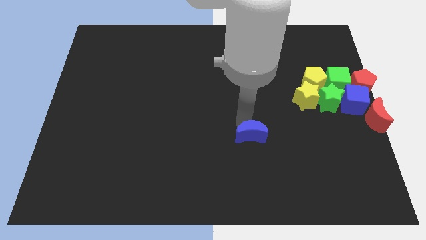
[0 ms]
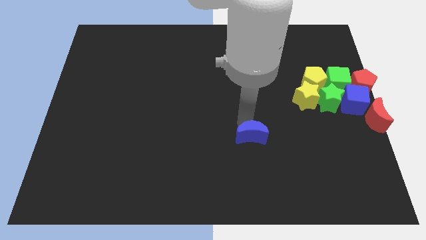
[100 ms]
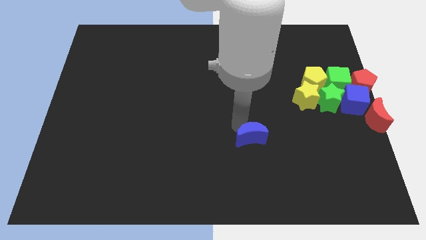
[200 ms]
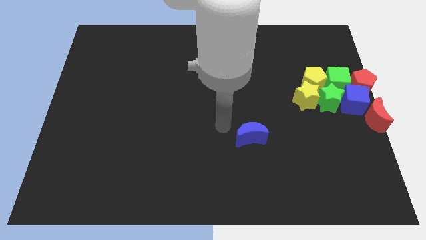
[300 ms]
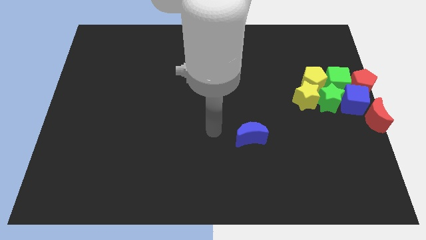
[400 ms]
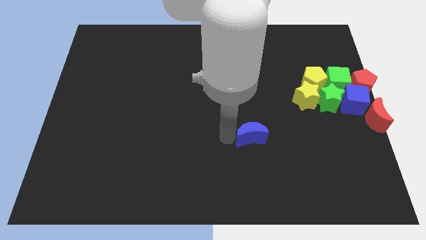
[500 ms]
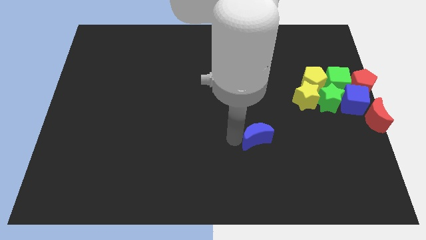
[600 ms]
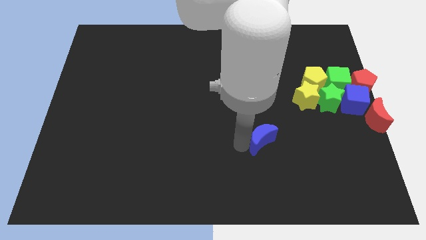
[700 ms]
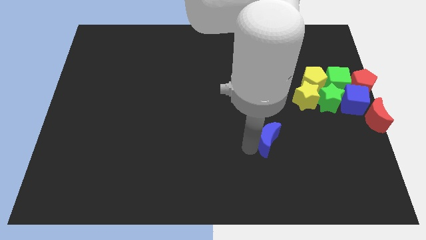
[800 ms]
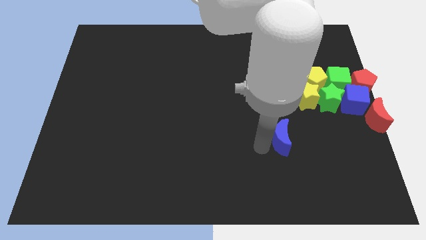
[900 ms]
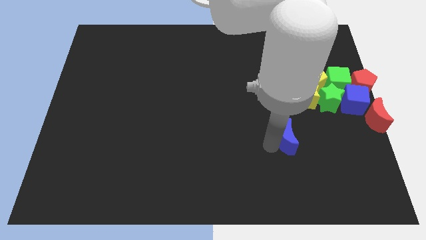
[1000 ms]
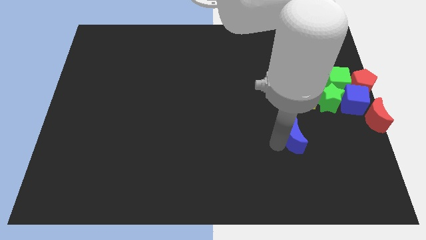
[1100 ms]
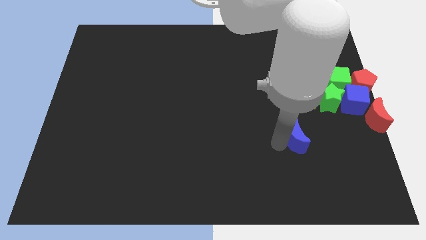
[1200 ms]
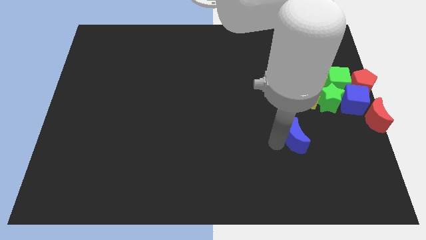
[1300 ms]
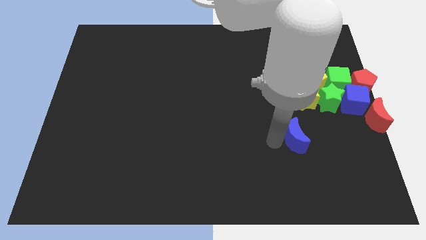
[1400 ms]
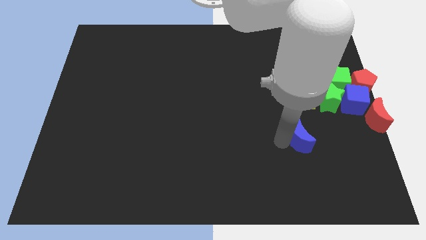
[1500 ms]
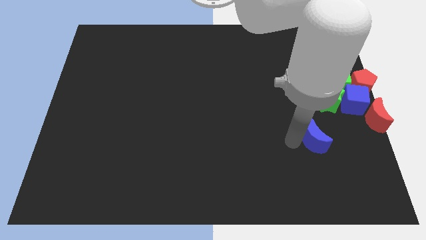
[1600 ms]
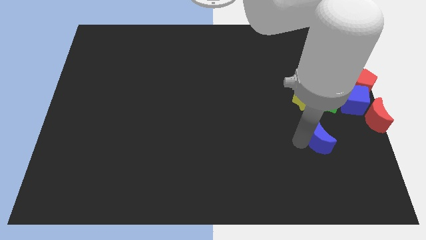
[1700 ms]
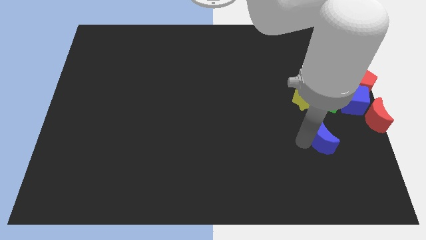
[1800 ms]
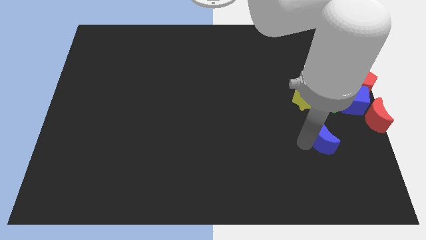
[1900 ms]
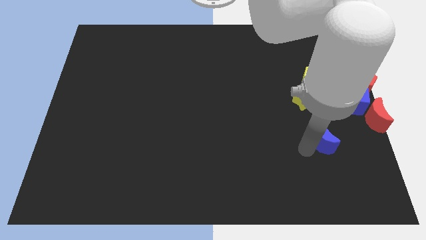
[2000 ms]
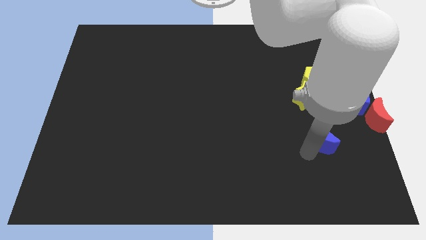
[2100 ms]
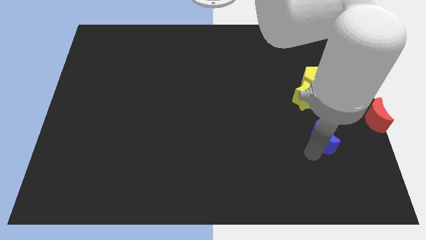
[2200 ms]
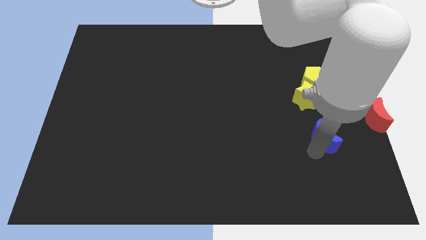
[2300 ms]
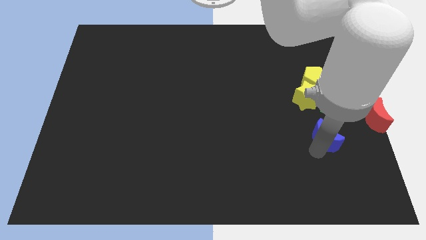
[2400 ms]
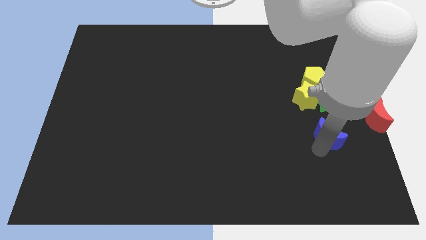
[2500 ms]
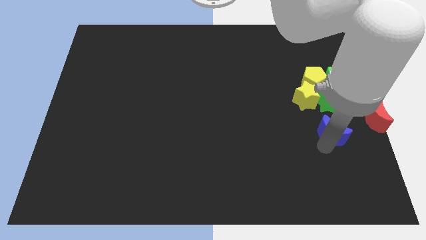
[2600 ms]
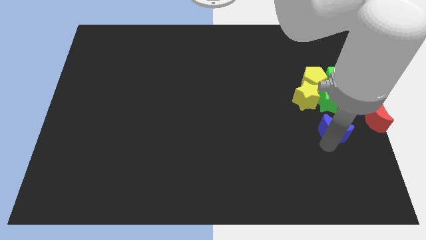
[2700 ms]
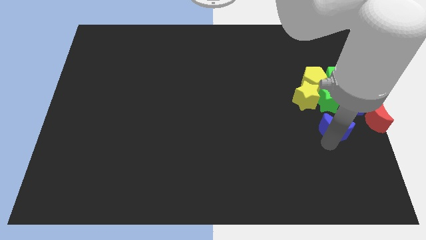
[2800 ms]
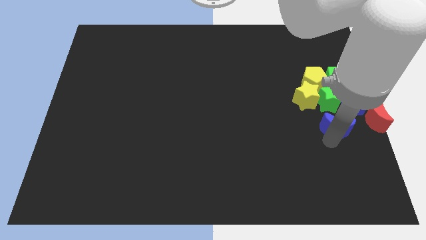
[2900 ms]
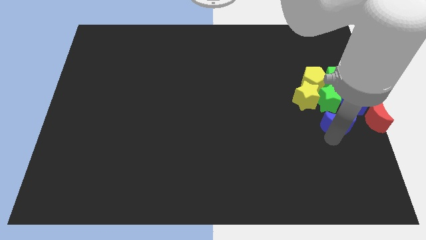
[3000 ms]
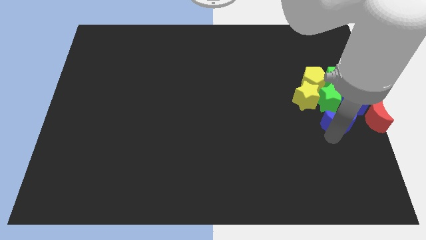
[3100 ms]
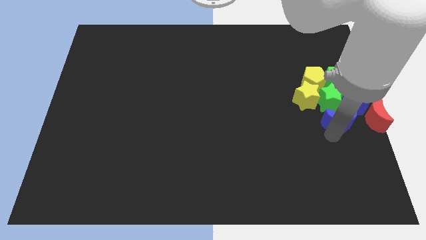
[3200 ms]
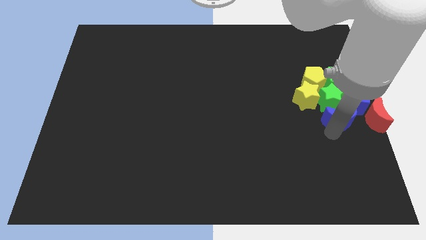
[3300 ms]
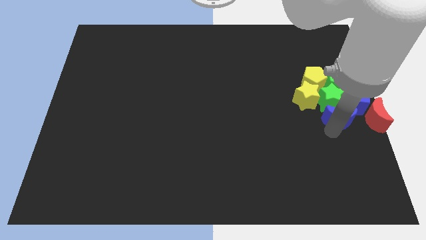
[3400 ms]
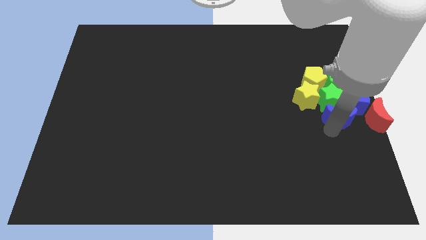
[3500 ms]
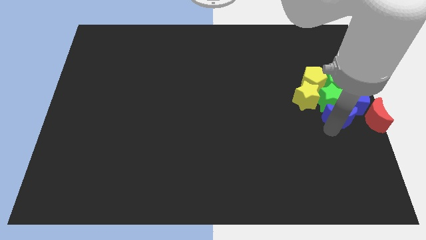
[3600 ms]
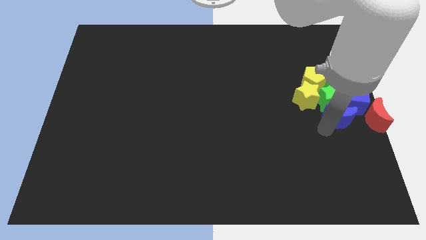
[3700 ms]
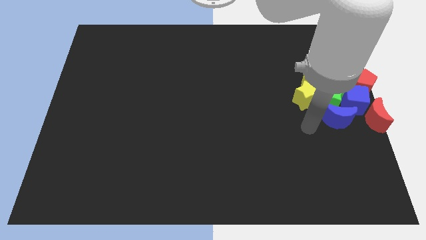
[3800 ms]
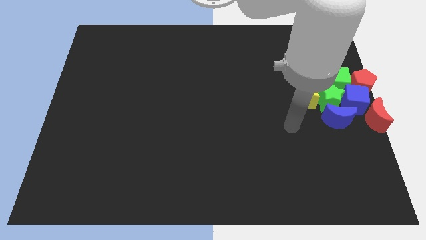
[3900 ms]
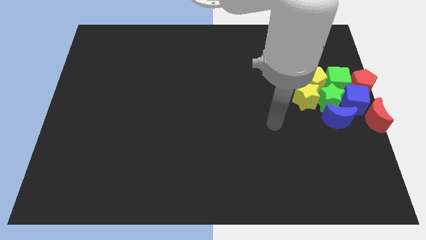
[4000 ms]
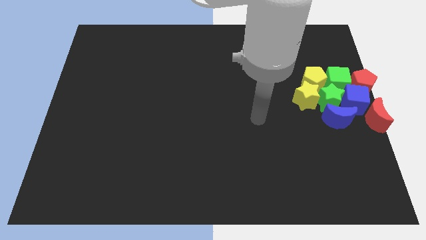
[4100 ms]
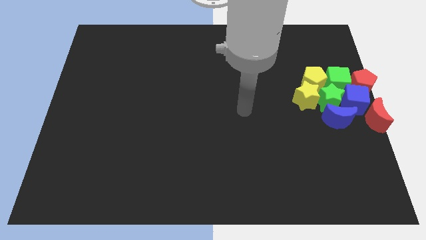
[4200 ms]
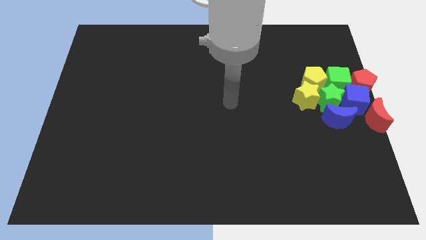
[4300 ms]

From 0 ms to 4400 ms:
move all the blocks towards the right center of the board

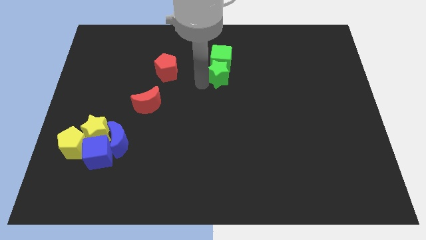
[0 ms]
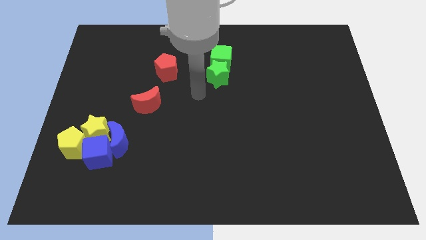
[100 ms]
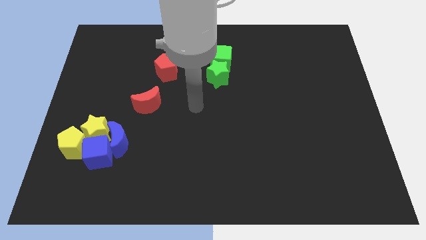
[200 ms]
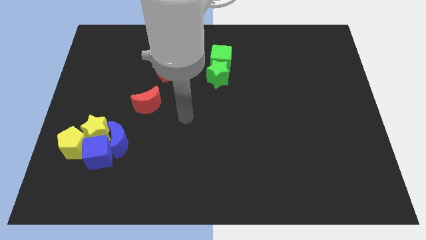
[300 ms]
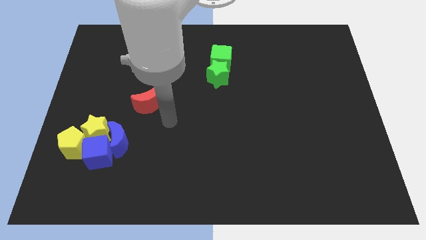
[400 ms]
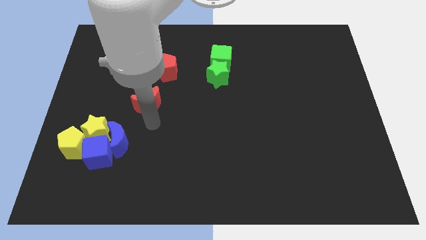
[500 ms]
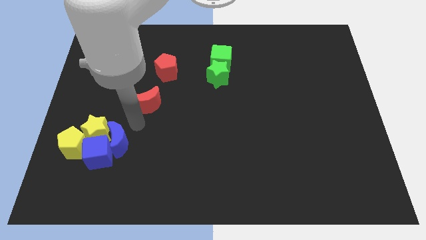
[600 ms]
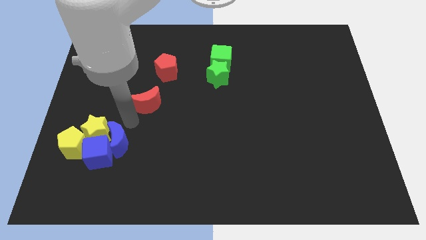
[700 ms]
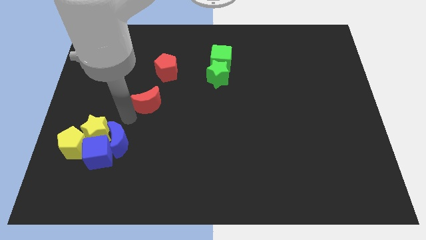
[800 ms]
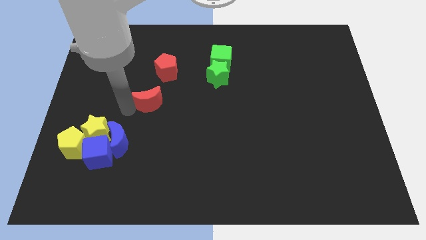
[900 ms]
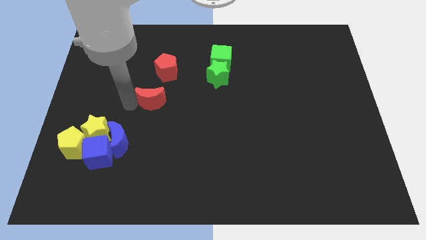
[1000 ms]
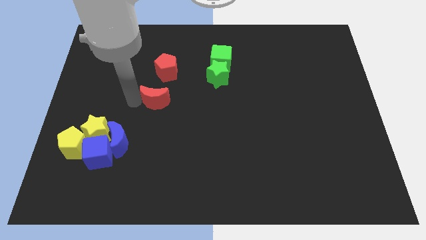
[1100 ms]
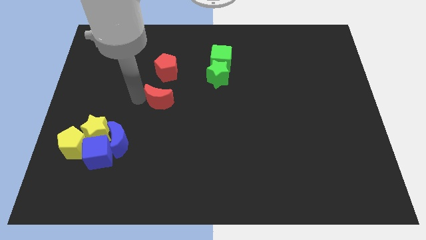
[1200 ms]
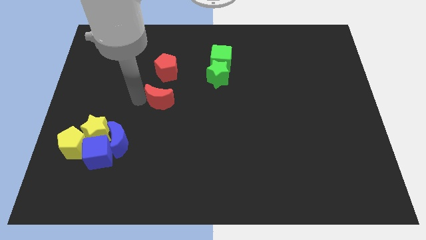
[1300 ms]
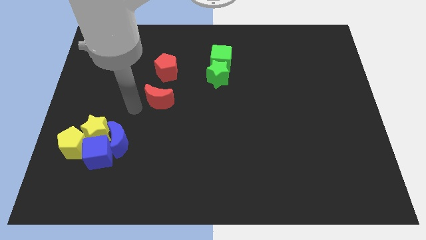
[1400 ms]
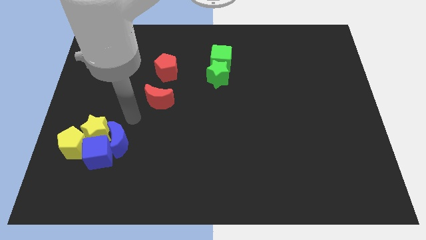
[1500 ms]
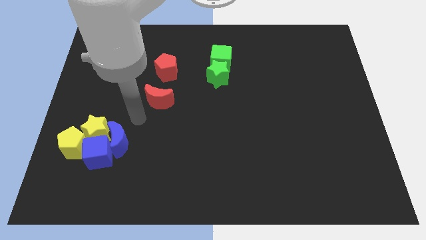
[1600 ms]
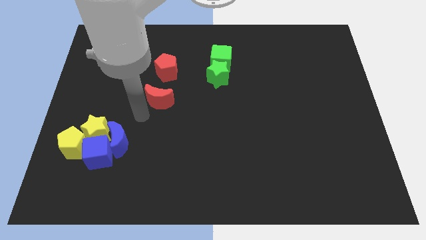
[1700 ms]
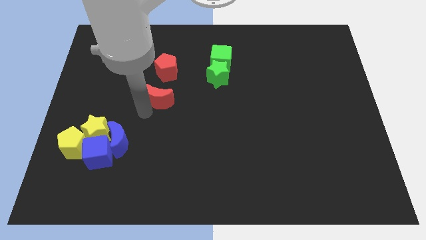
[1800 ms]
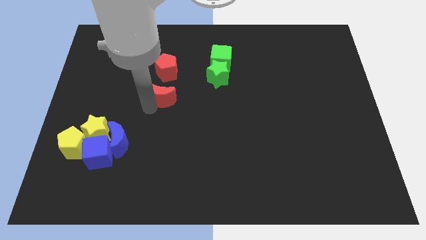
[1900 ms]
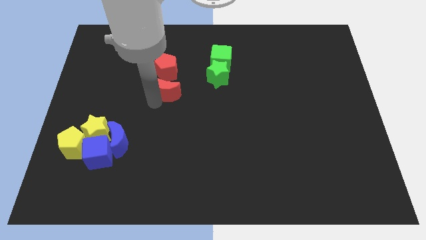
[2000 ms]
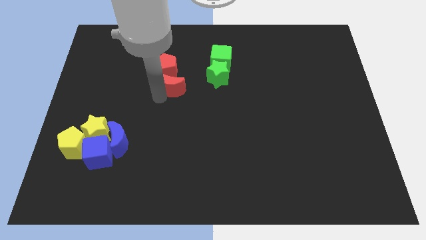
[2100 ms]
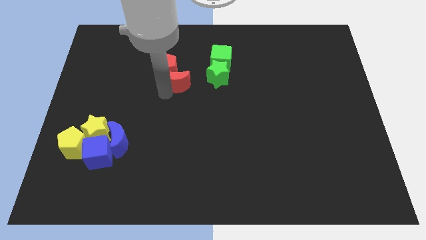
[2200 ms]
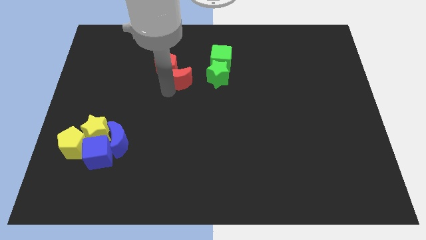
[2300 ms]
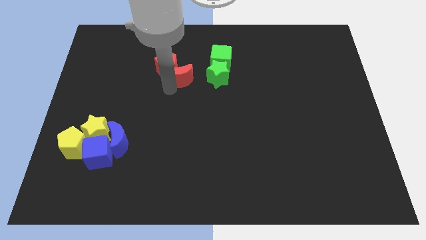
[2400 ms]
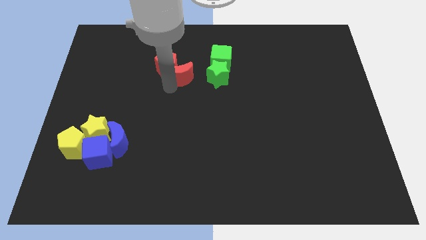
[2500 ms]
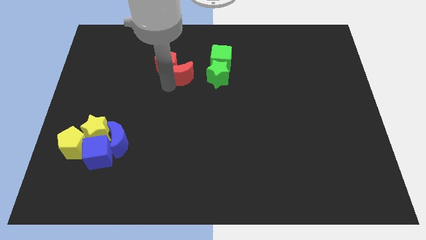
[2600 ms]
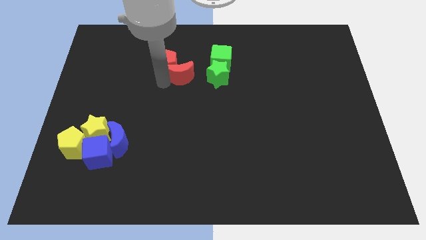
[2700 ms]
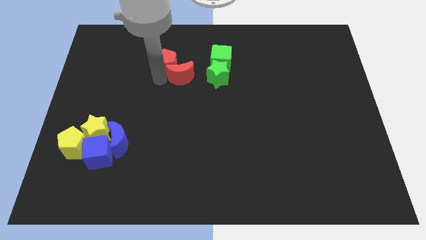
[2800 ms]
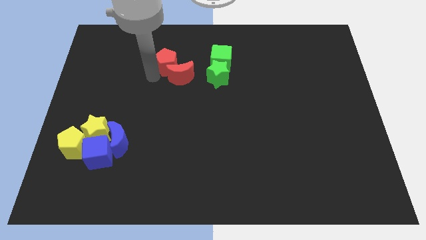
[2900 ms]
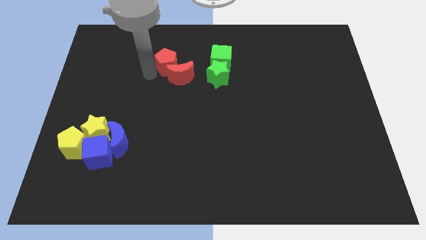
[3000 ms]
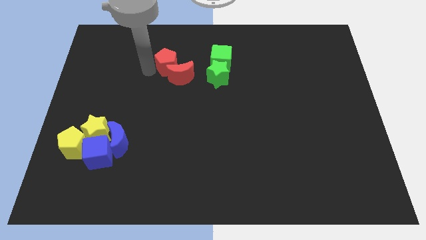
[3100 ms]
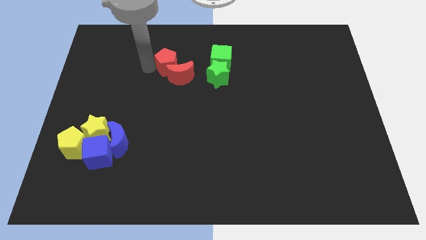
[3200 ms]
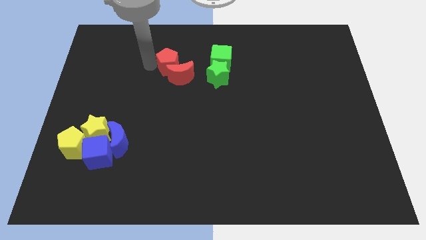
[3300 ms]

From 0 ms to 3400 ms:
move red moon to the bottom of red pentagon

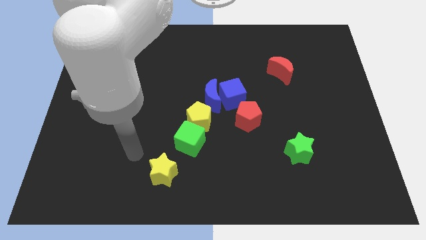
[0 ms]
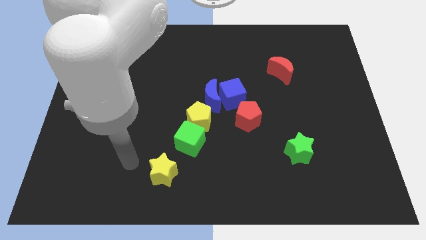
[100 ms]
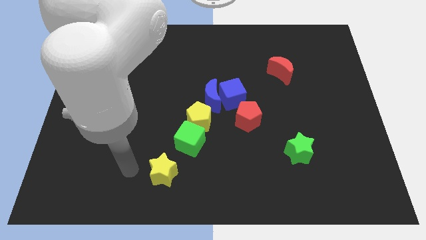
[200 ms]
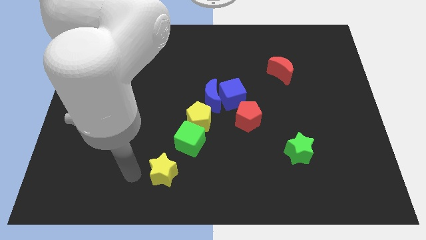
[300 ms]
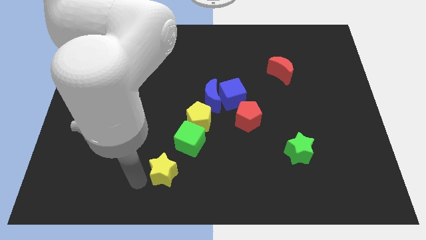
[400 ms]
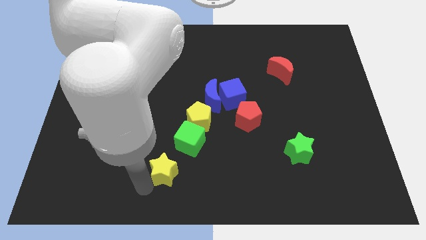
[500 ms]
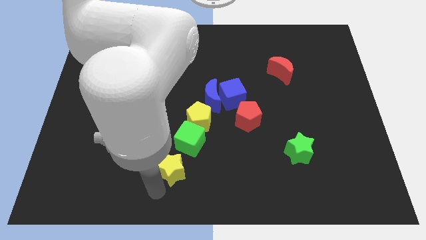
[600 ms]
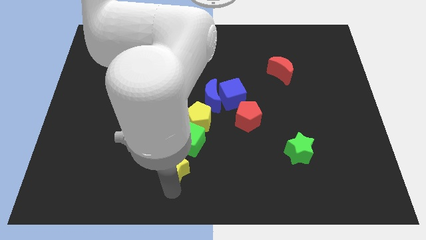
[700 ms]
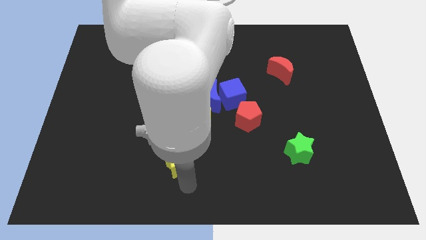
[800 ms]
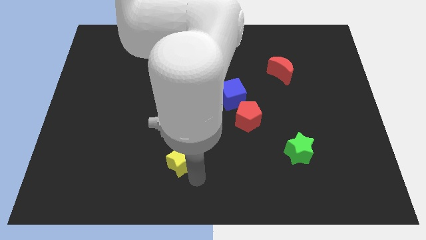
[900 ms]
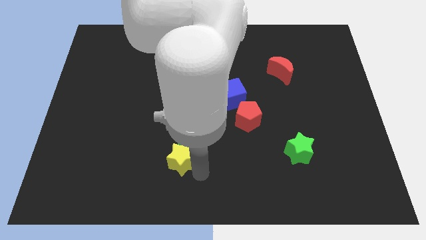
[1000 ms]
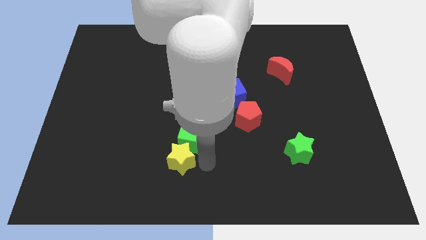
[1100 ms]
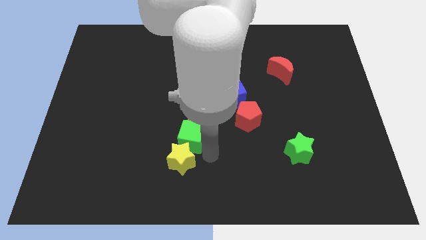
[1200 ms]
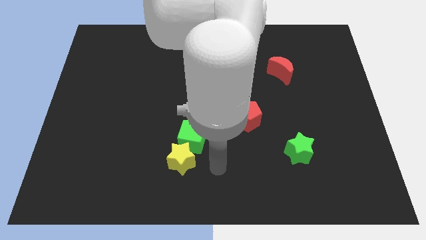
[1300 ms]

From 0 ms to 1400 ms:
slide the yellow star into the green cube
